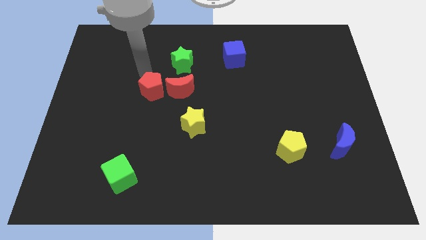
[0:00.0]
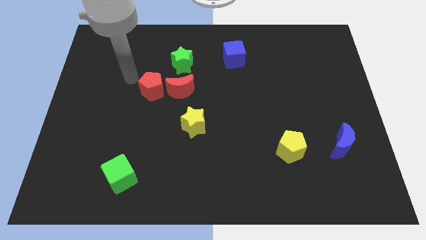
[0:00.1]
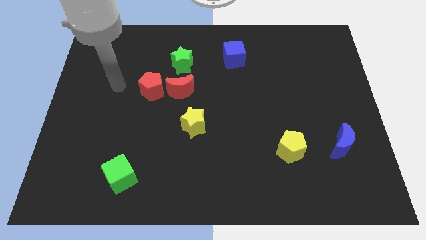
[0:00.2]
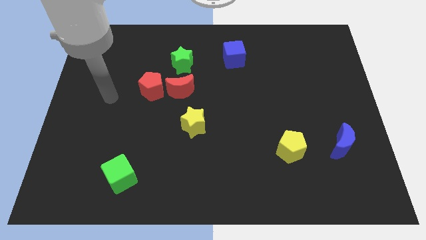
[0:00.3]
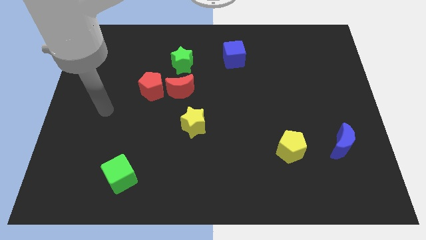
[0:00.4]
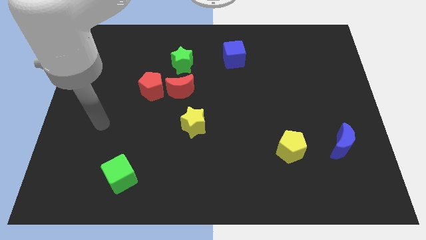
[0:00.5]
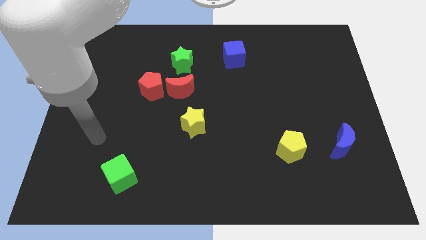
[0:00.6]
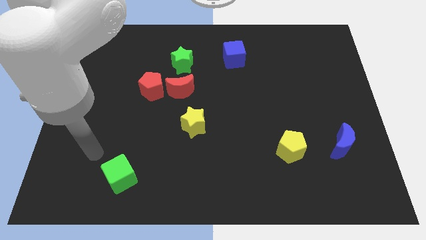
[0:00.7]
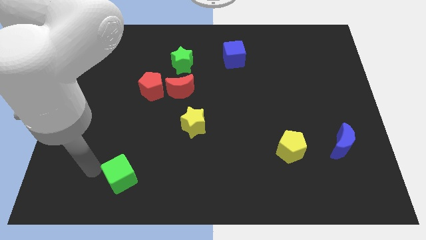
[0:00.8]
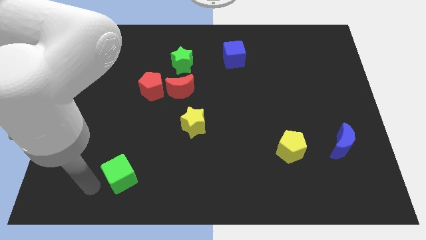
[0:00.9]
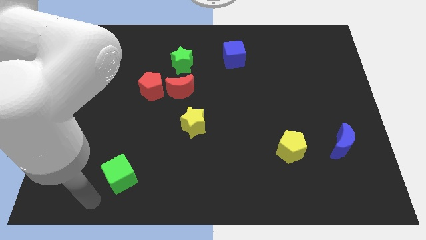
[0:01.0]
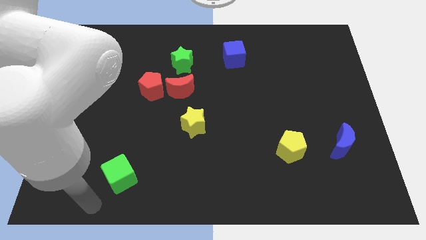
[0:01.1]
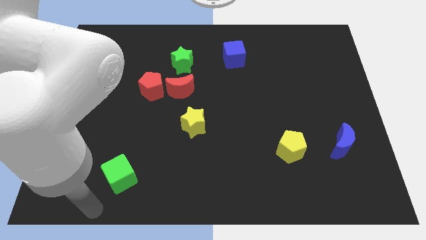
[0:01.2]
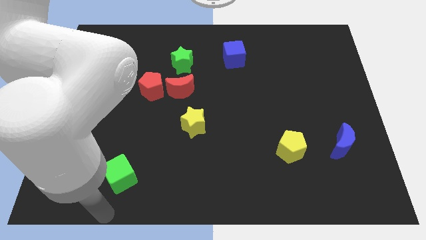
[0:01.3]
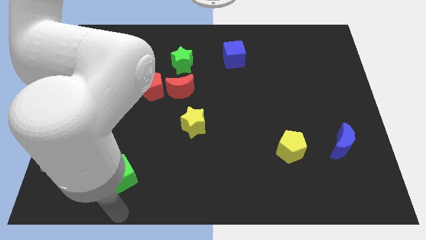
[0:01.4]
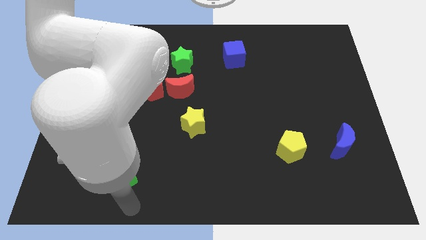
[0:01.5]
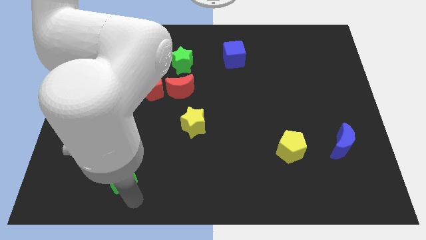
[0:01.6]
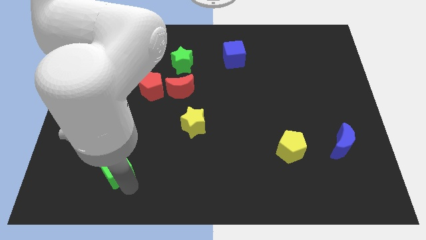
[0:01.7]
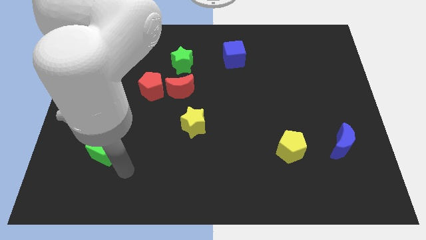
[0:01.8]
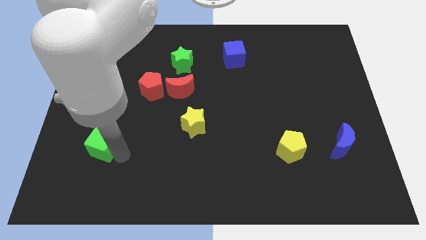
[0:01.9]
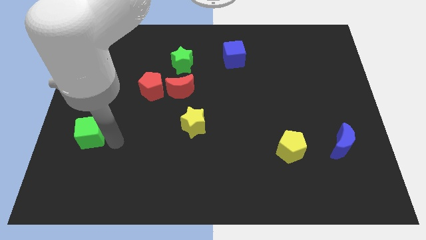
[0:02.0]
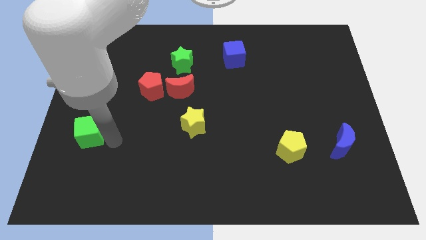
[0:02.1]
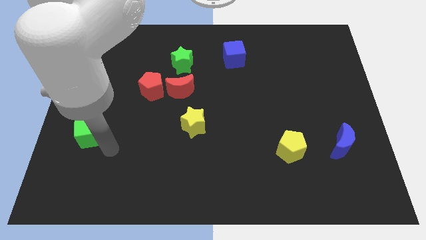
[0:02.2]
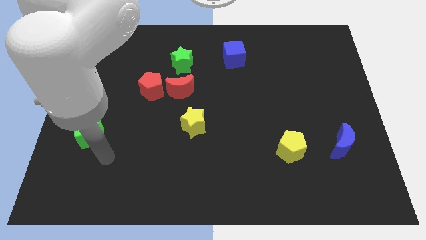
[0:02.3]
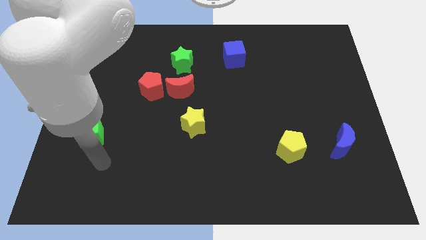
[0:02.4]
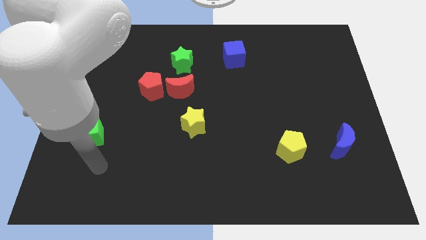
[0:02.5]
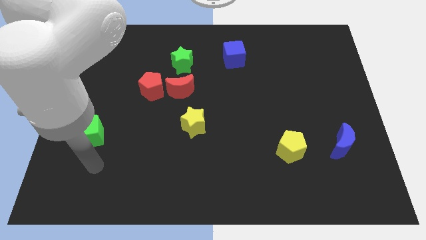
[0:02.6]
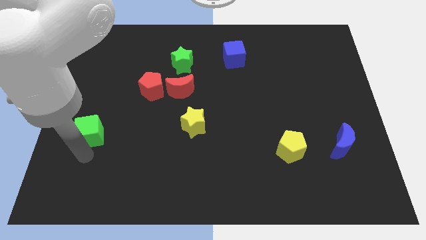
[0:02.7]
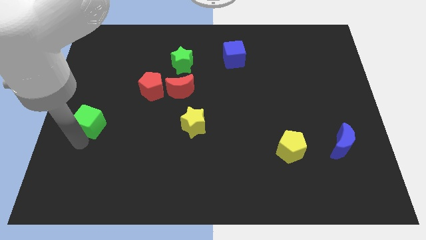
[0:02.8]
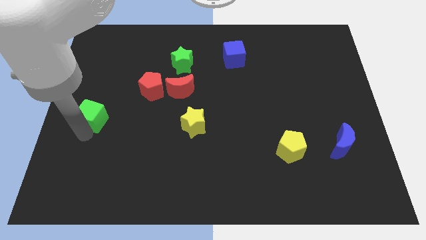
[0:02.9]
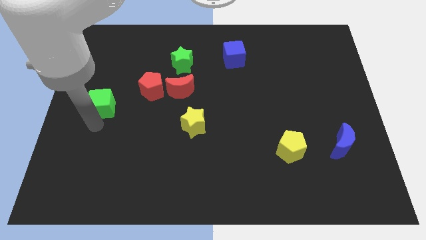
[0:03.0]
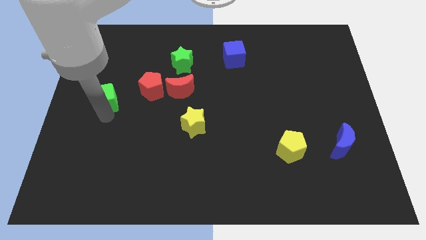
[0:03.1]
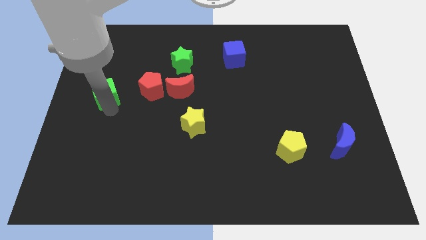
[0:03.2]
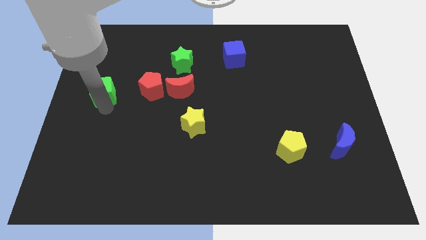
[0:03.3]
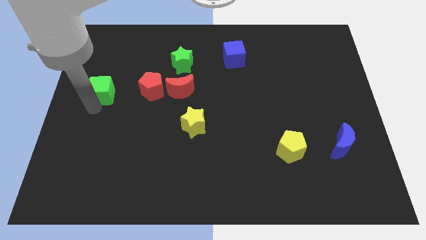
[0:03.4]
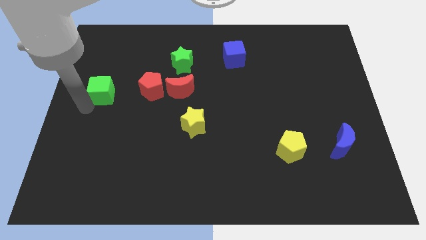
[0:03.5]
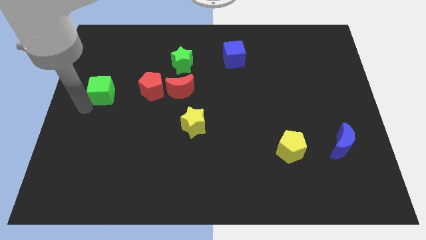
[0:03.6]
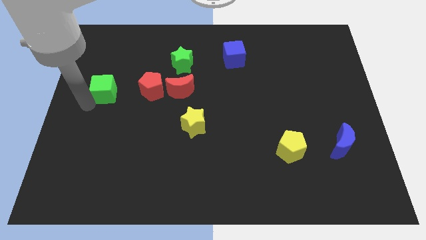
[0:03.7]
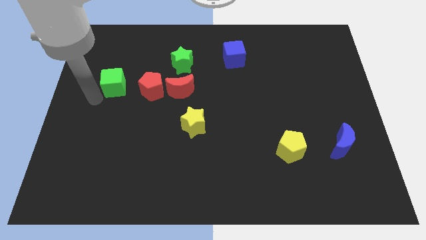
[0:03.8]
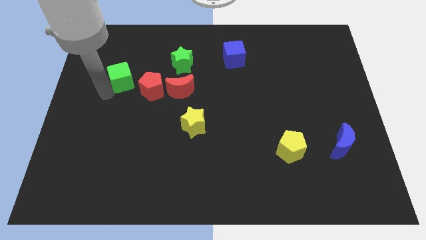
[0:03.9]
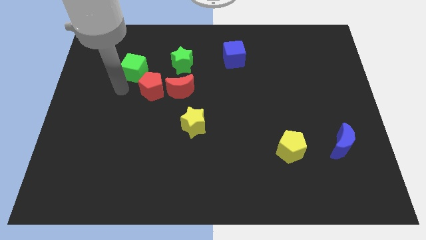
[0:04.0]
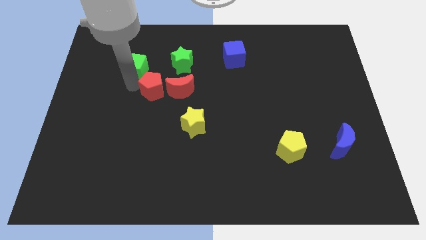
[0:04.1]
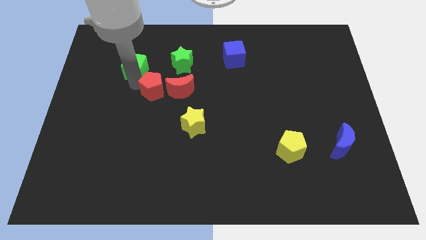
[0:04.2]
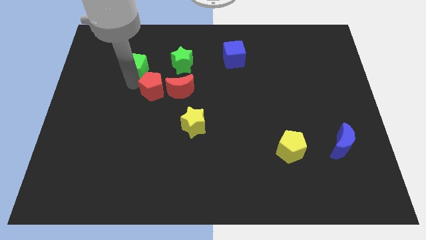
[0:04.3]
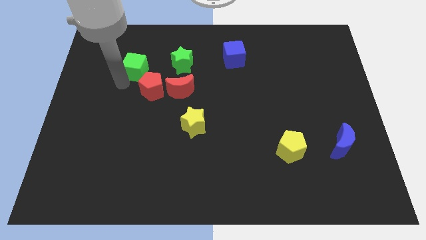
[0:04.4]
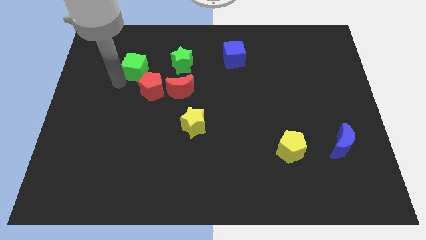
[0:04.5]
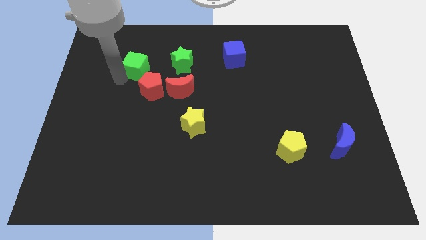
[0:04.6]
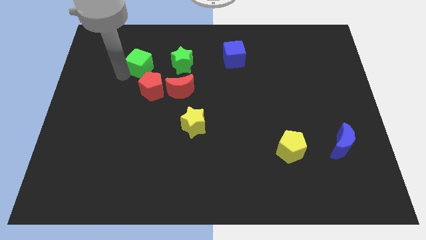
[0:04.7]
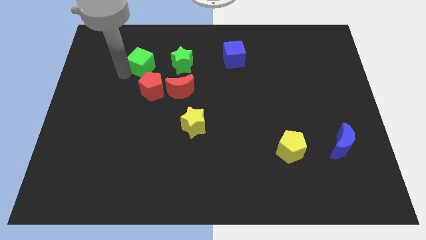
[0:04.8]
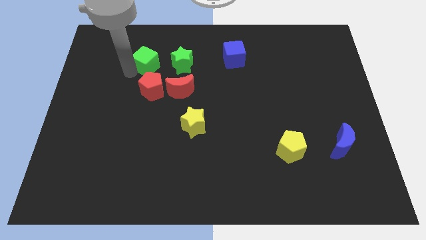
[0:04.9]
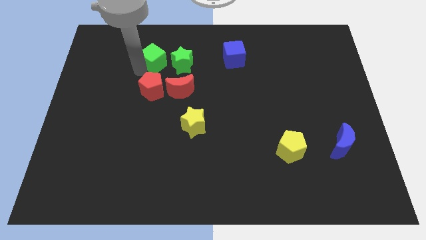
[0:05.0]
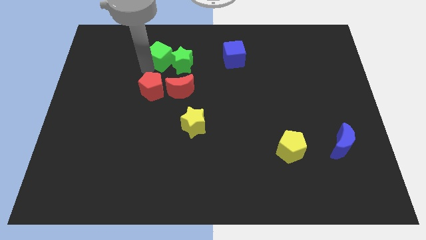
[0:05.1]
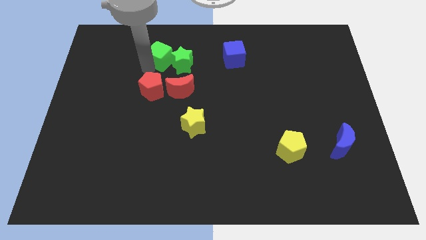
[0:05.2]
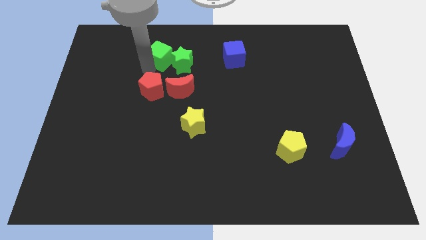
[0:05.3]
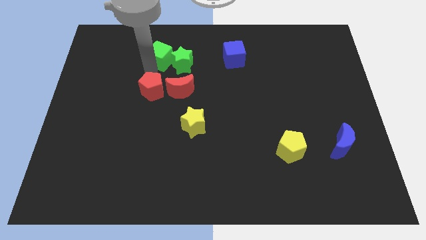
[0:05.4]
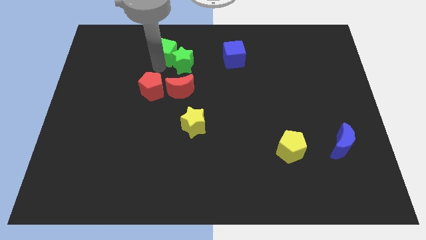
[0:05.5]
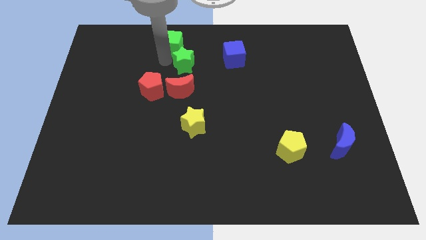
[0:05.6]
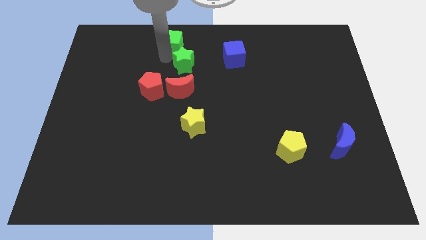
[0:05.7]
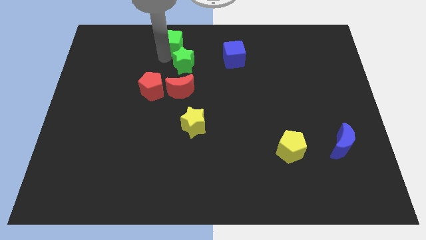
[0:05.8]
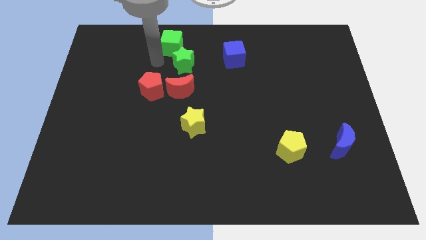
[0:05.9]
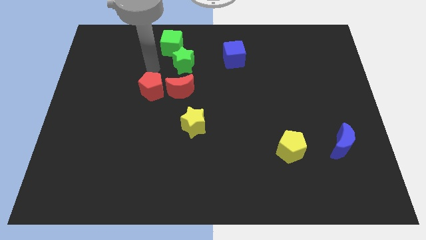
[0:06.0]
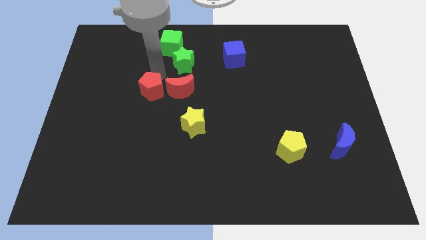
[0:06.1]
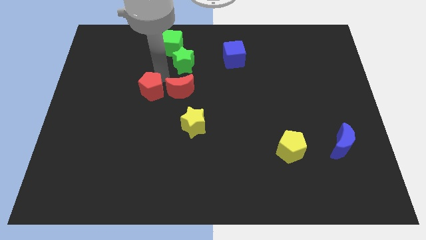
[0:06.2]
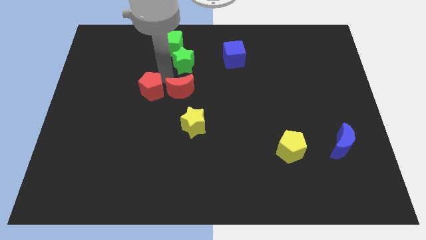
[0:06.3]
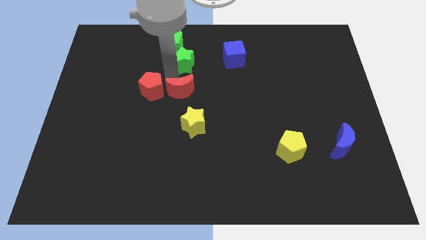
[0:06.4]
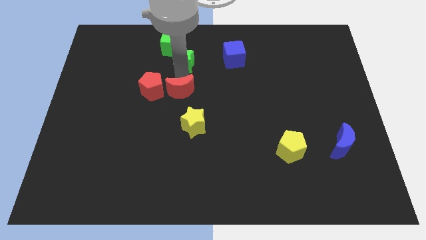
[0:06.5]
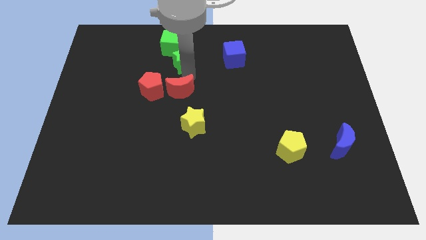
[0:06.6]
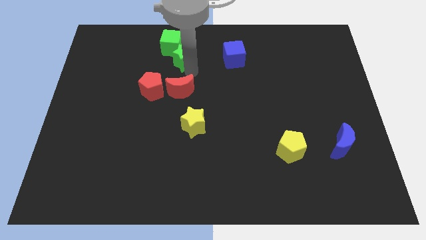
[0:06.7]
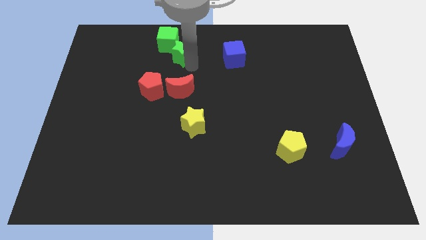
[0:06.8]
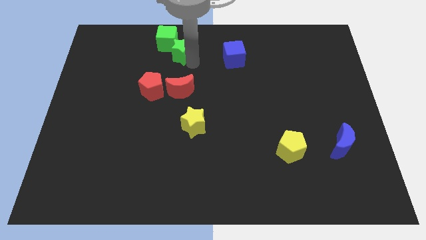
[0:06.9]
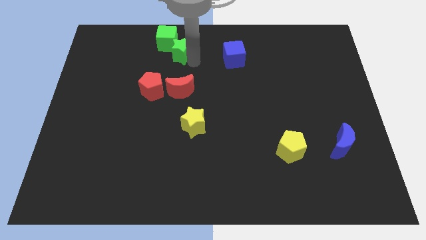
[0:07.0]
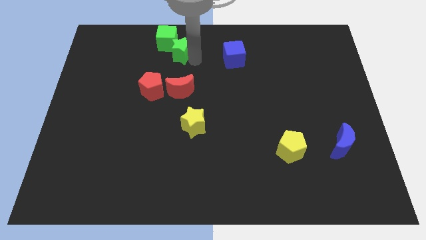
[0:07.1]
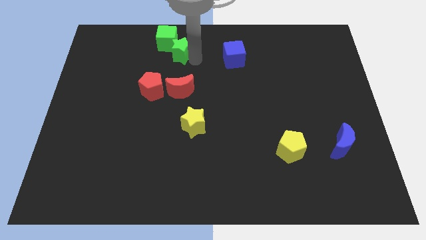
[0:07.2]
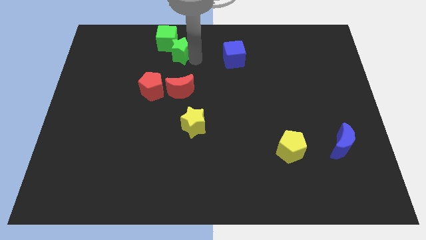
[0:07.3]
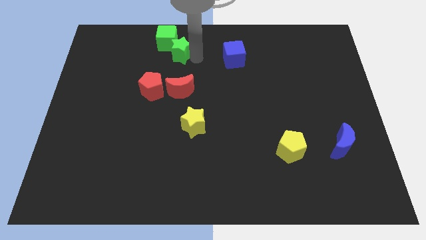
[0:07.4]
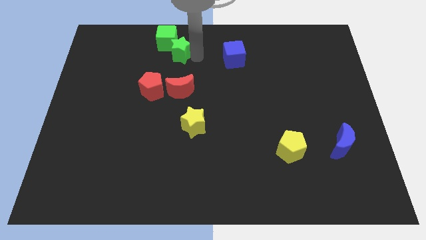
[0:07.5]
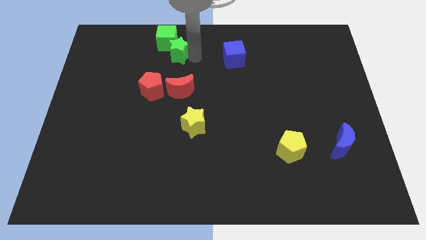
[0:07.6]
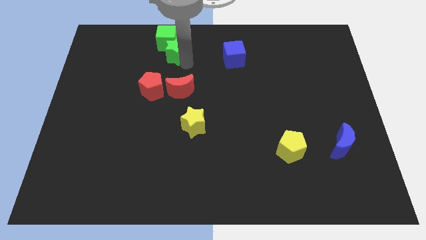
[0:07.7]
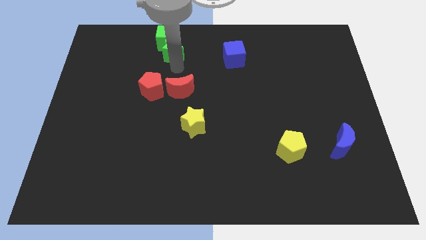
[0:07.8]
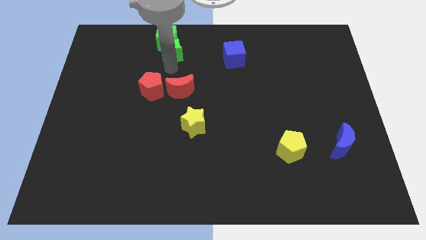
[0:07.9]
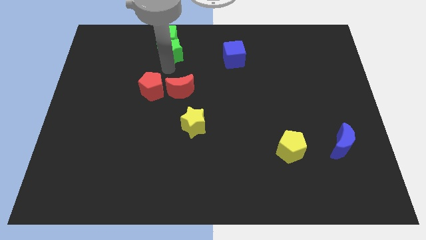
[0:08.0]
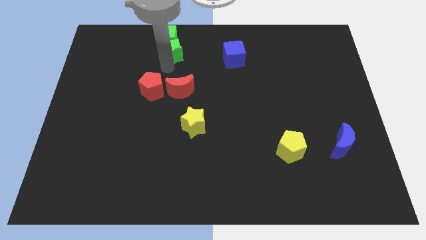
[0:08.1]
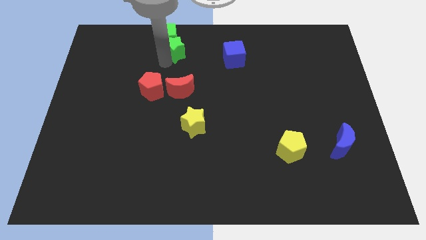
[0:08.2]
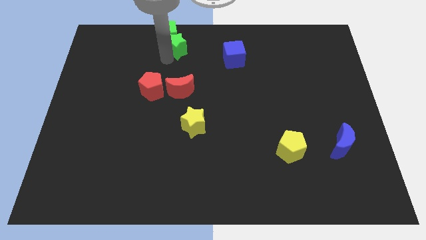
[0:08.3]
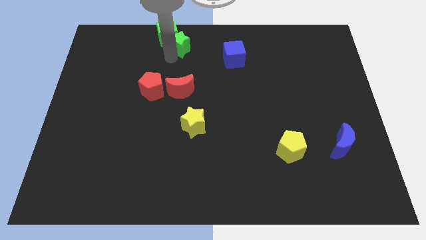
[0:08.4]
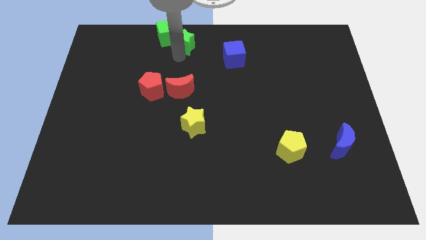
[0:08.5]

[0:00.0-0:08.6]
move the green star and green cube to the top center

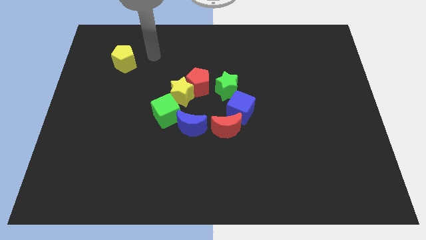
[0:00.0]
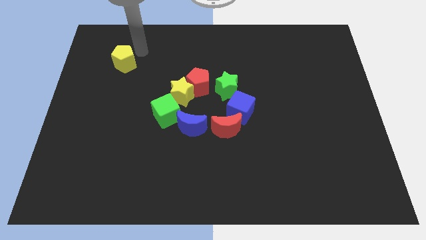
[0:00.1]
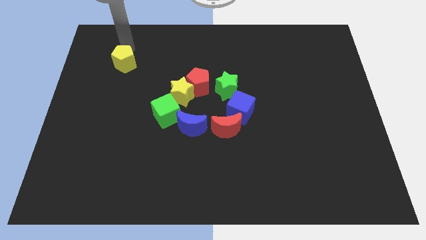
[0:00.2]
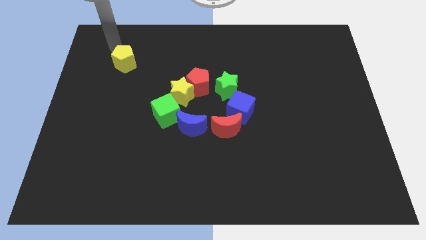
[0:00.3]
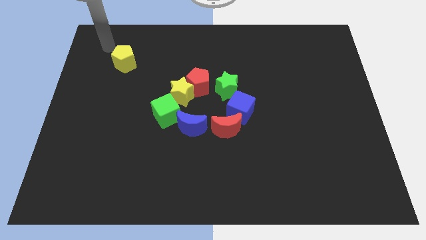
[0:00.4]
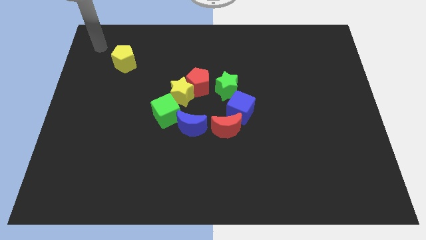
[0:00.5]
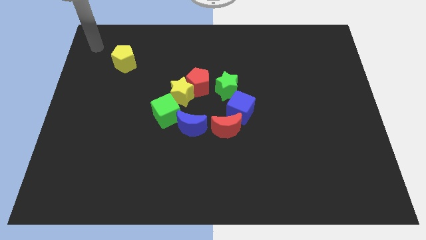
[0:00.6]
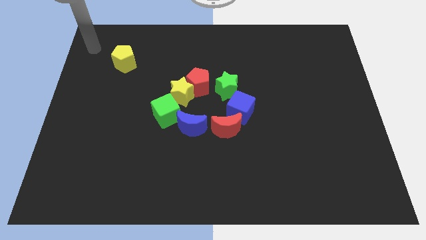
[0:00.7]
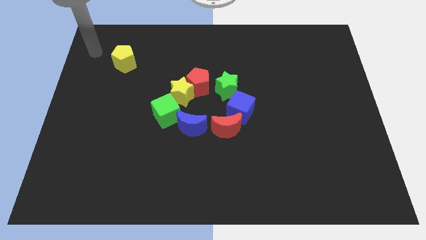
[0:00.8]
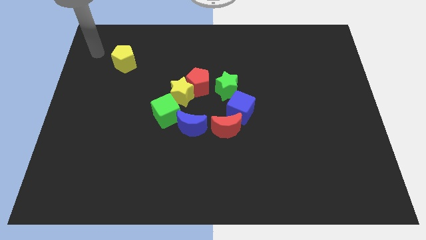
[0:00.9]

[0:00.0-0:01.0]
place your arm towards left side of yellow pentagon
